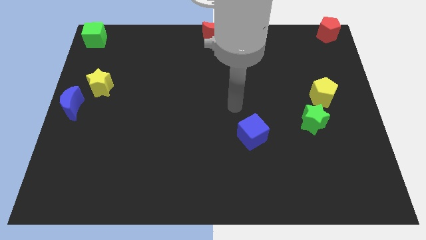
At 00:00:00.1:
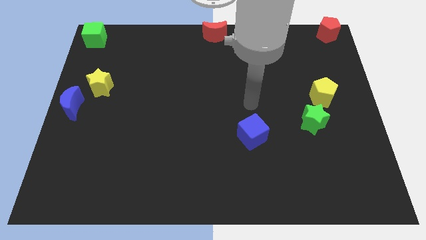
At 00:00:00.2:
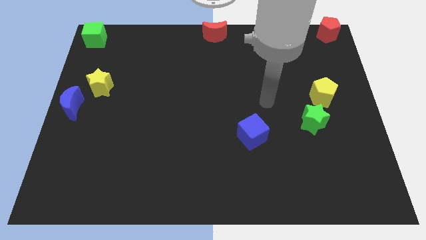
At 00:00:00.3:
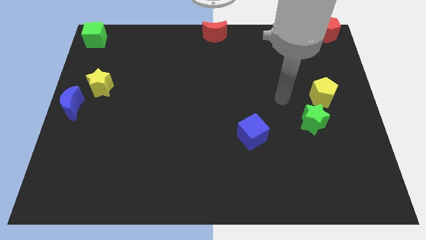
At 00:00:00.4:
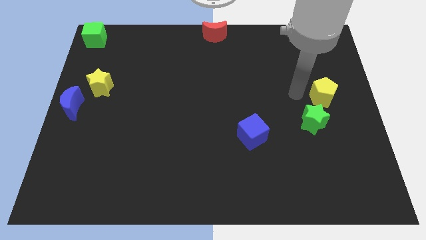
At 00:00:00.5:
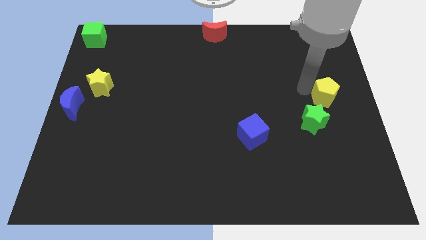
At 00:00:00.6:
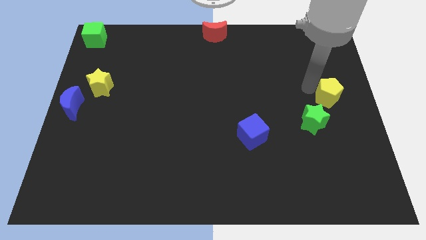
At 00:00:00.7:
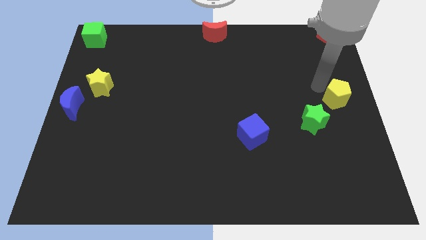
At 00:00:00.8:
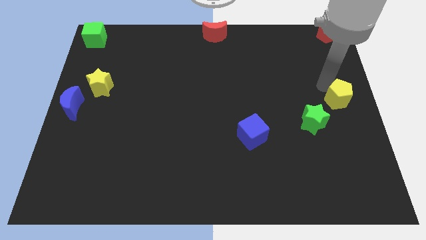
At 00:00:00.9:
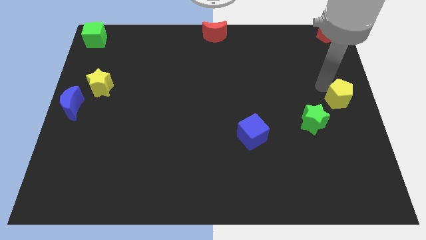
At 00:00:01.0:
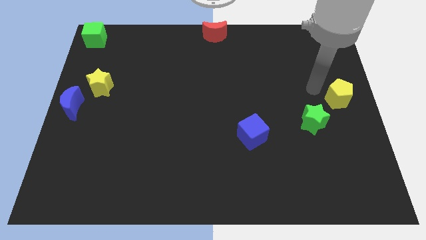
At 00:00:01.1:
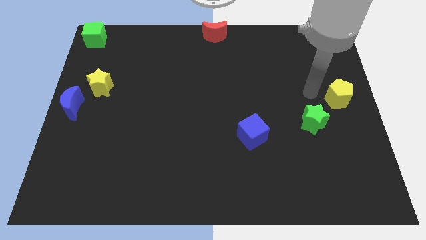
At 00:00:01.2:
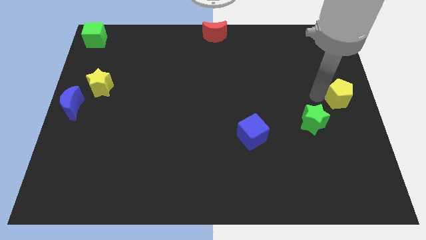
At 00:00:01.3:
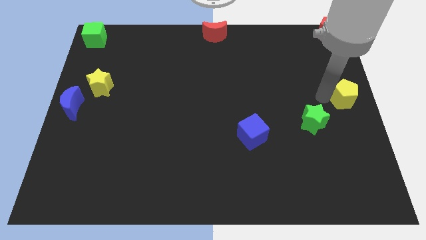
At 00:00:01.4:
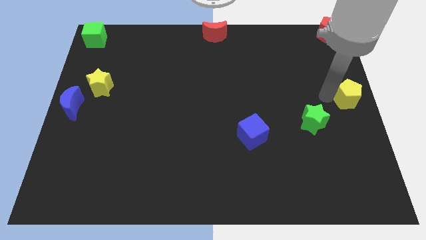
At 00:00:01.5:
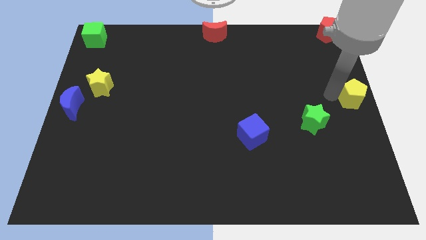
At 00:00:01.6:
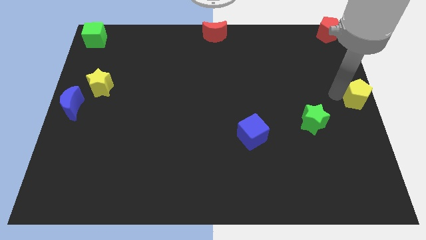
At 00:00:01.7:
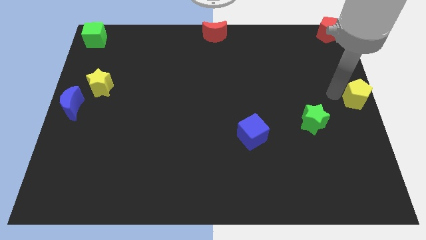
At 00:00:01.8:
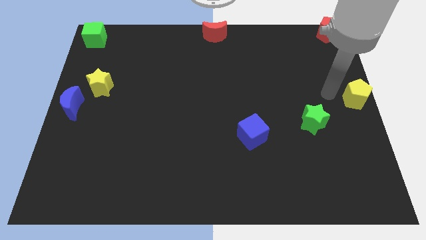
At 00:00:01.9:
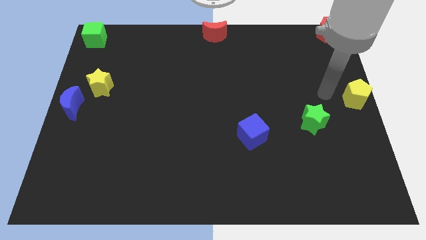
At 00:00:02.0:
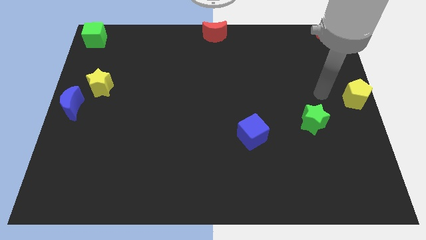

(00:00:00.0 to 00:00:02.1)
push the yellow pentagon slightly to the right

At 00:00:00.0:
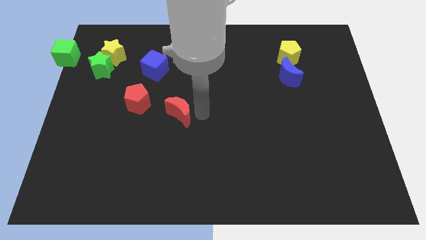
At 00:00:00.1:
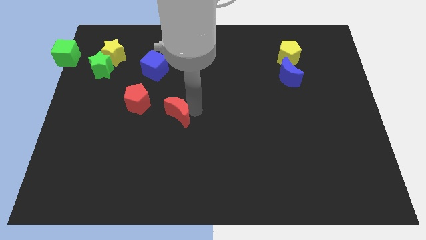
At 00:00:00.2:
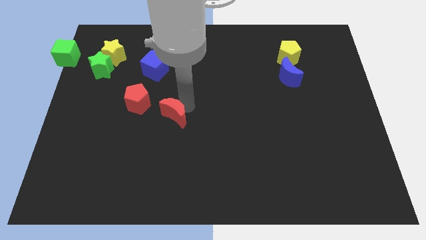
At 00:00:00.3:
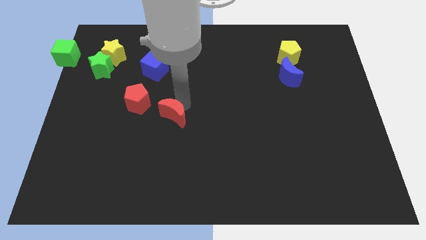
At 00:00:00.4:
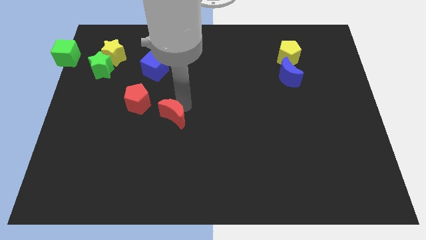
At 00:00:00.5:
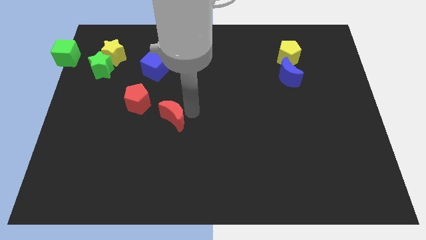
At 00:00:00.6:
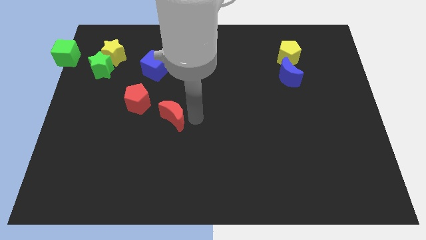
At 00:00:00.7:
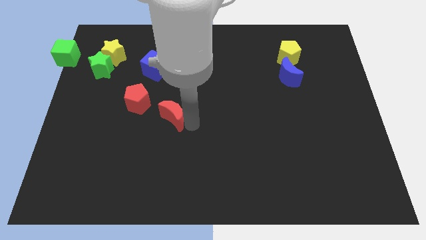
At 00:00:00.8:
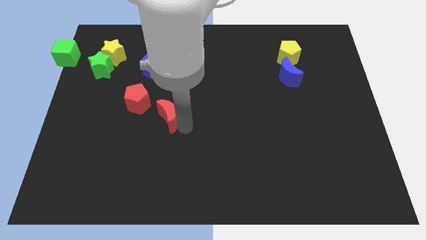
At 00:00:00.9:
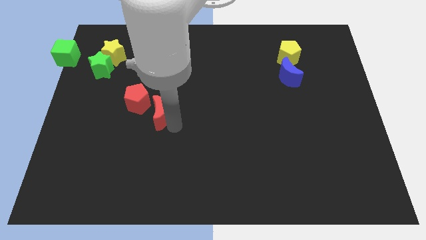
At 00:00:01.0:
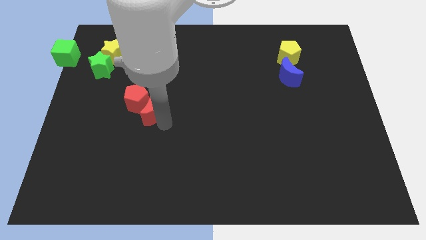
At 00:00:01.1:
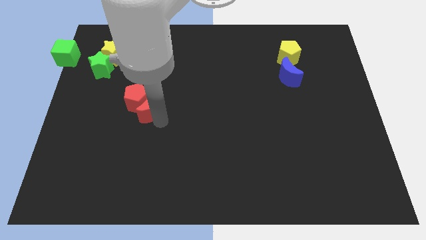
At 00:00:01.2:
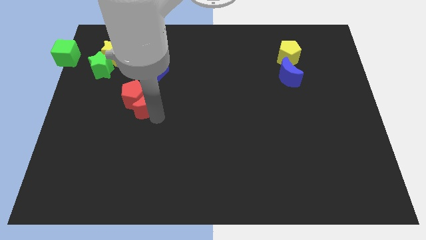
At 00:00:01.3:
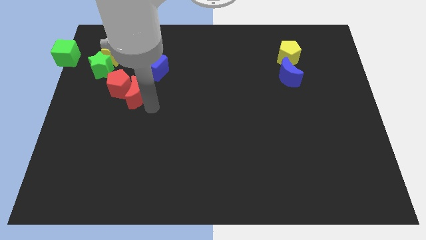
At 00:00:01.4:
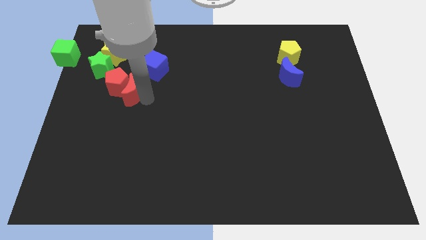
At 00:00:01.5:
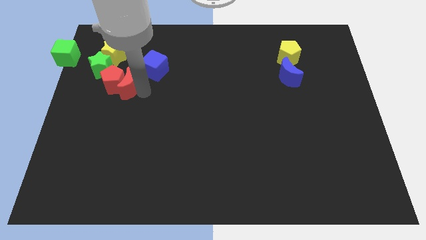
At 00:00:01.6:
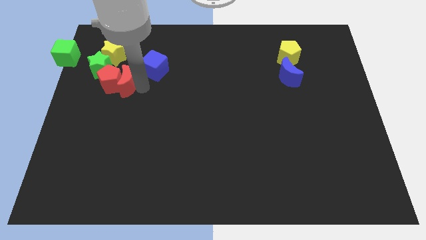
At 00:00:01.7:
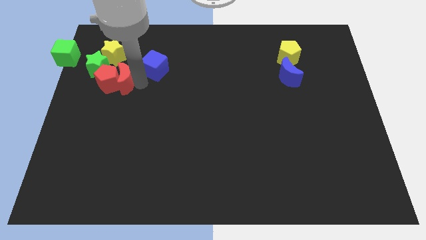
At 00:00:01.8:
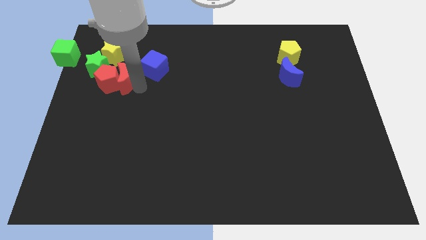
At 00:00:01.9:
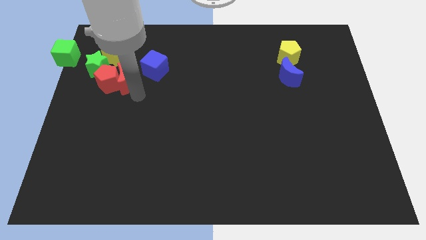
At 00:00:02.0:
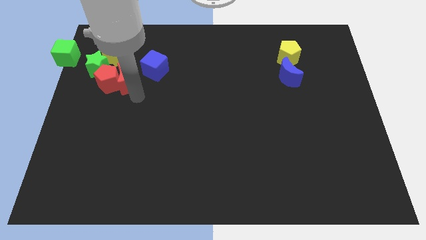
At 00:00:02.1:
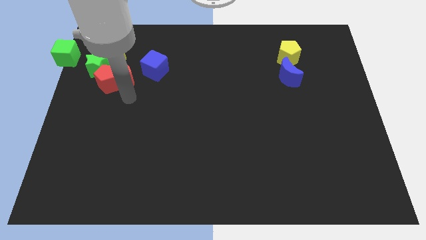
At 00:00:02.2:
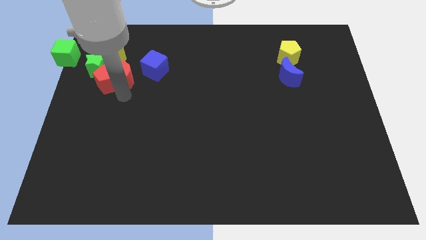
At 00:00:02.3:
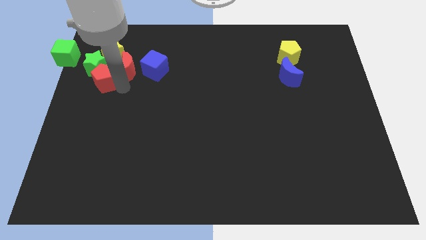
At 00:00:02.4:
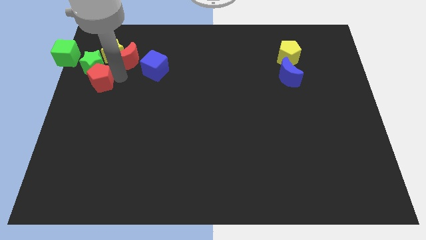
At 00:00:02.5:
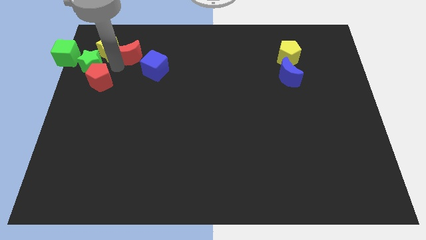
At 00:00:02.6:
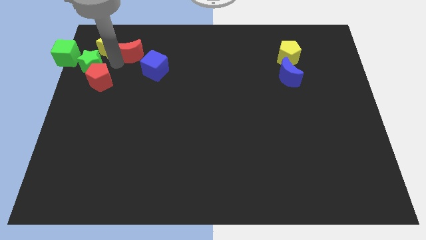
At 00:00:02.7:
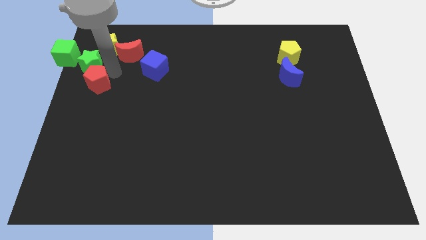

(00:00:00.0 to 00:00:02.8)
move the red moon to the right of the yellow star

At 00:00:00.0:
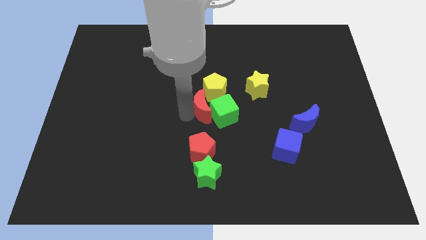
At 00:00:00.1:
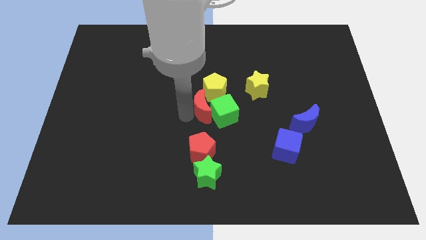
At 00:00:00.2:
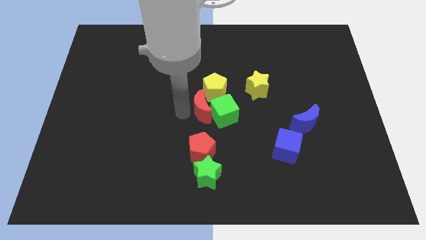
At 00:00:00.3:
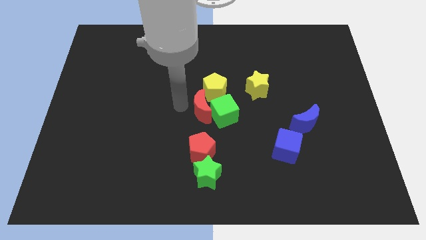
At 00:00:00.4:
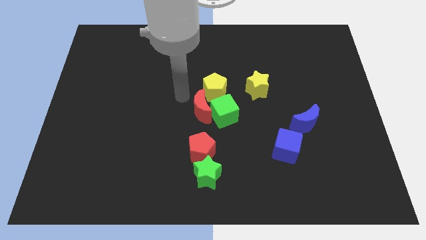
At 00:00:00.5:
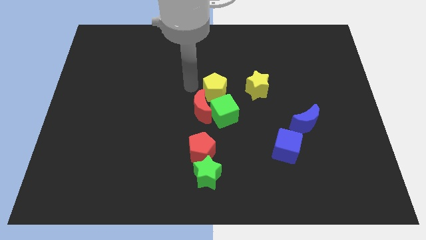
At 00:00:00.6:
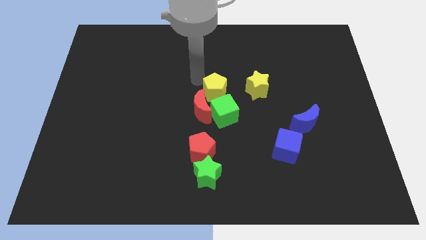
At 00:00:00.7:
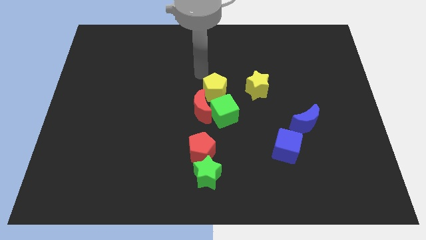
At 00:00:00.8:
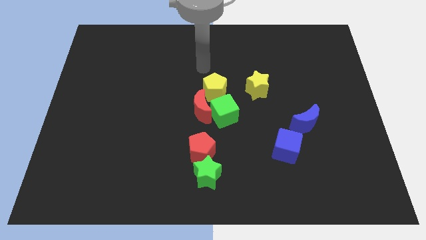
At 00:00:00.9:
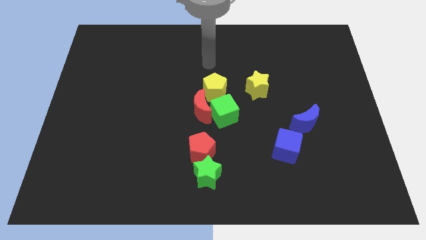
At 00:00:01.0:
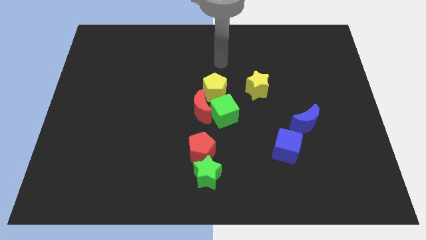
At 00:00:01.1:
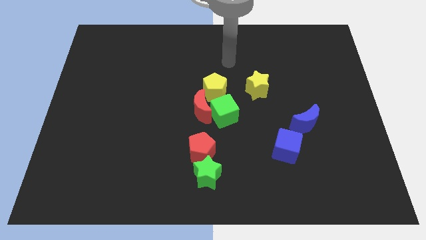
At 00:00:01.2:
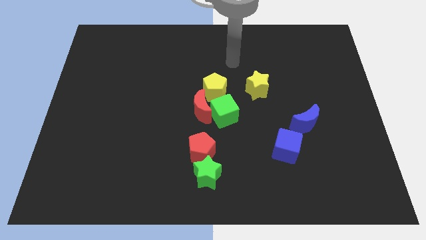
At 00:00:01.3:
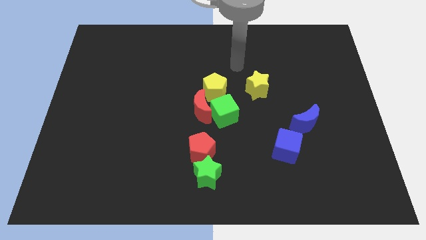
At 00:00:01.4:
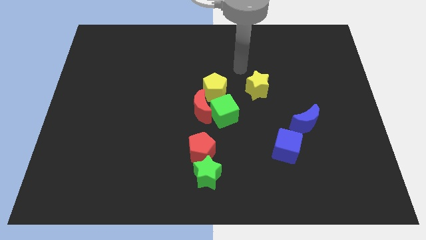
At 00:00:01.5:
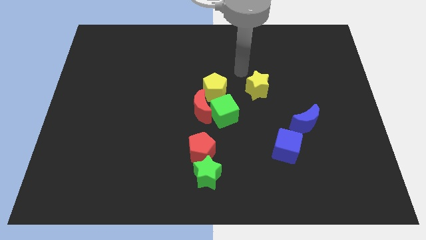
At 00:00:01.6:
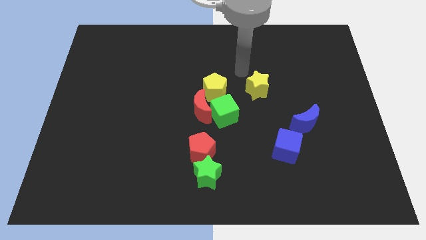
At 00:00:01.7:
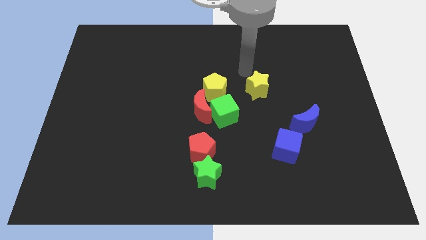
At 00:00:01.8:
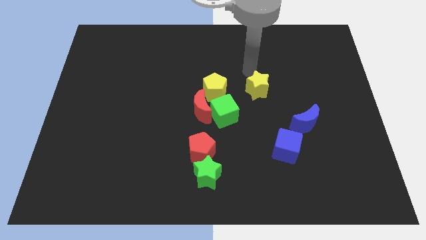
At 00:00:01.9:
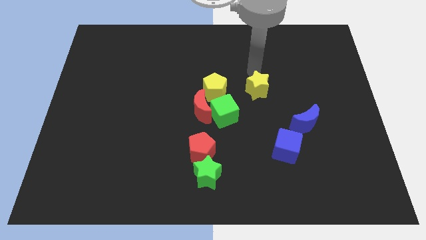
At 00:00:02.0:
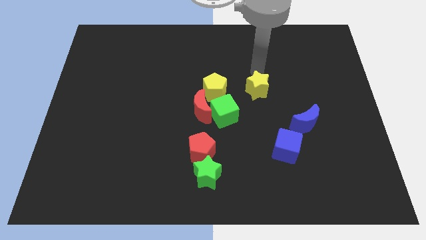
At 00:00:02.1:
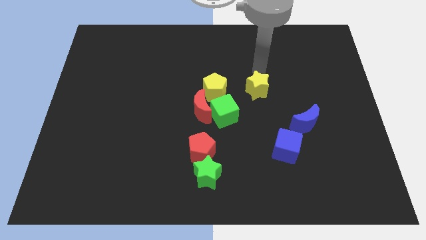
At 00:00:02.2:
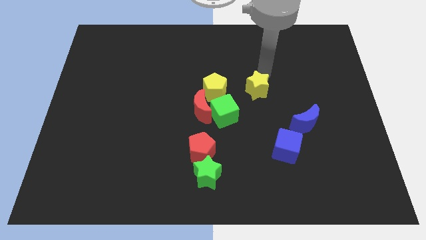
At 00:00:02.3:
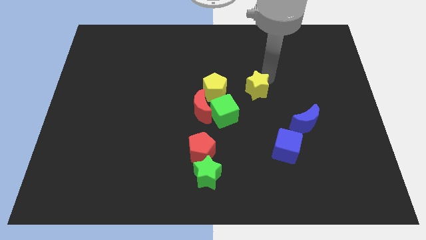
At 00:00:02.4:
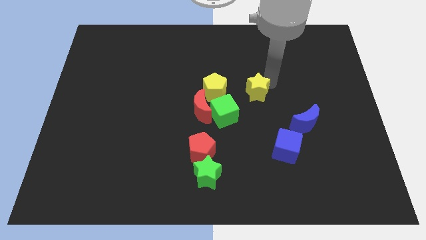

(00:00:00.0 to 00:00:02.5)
tap the top right side of the yellow star

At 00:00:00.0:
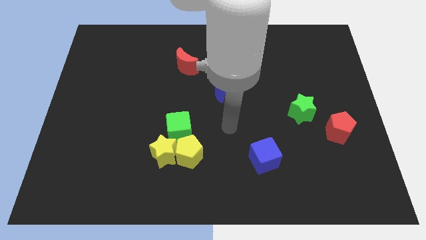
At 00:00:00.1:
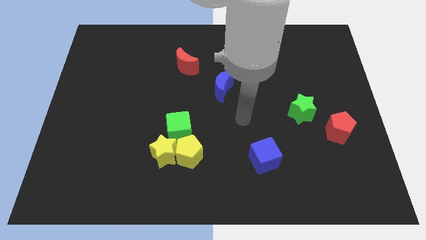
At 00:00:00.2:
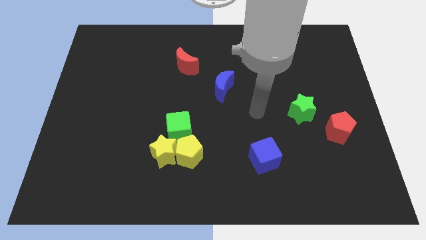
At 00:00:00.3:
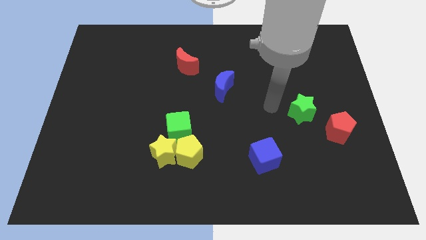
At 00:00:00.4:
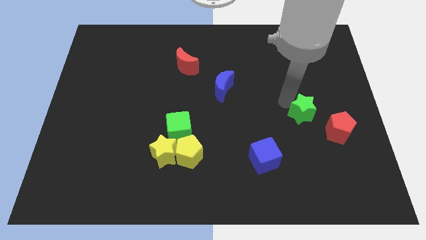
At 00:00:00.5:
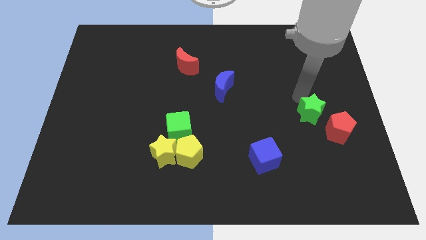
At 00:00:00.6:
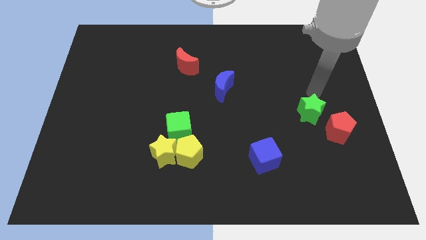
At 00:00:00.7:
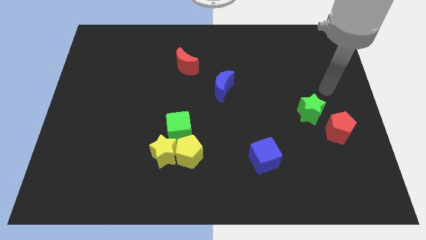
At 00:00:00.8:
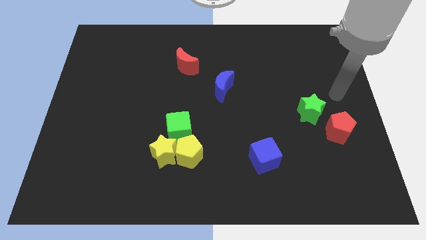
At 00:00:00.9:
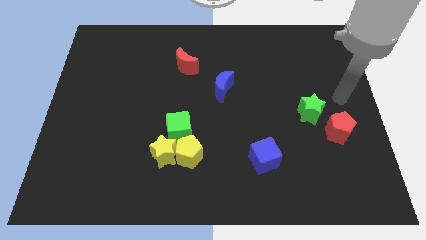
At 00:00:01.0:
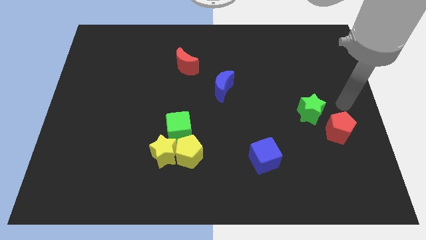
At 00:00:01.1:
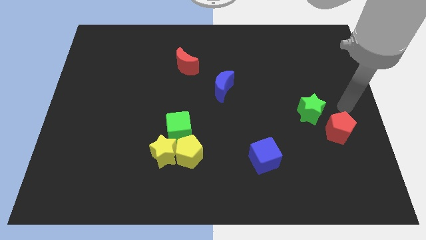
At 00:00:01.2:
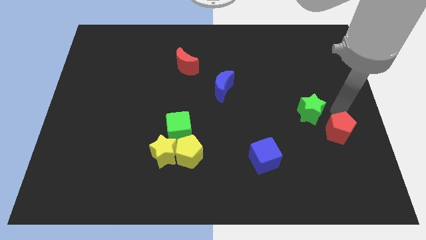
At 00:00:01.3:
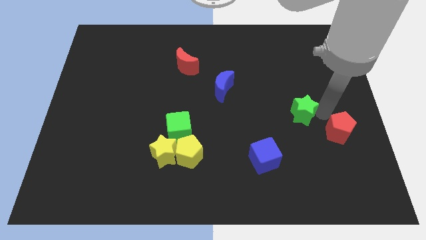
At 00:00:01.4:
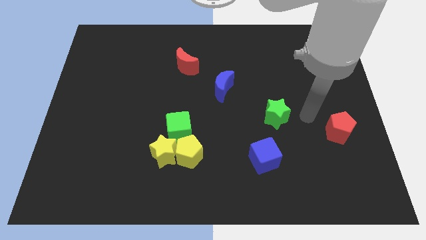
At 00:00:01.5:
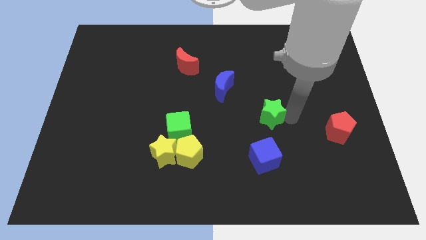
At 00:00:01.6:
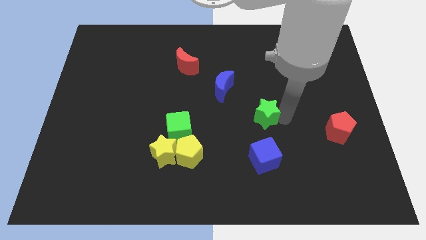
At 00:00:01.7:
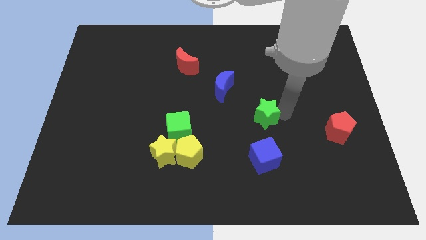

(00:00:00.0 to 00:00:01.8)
move the green star towards the green cube
